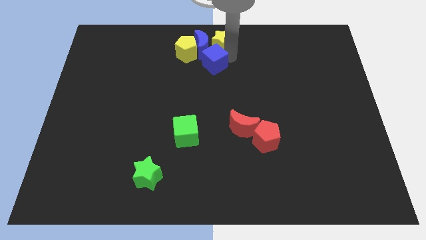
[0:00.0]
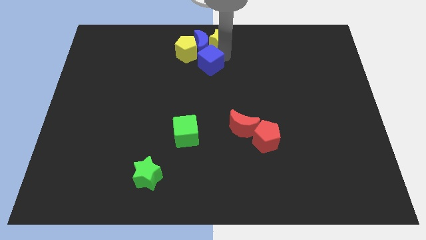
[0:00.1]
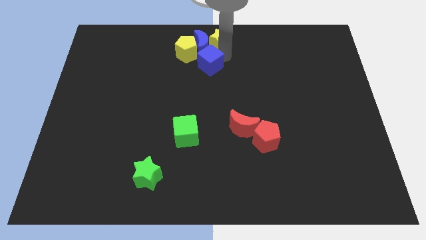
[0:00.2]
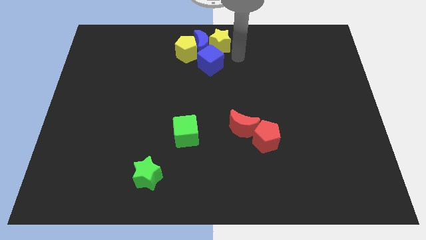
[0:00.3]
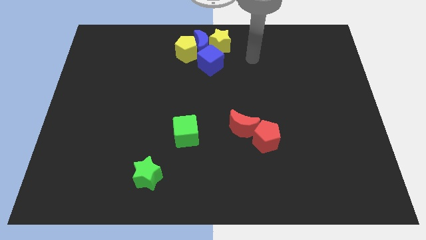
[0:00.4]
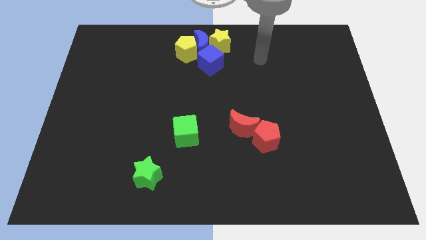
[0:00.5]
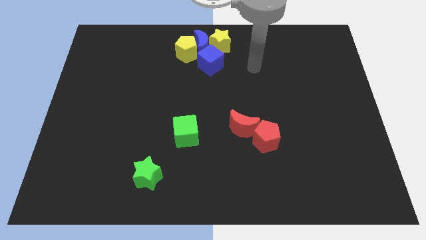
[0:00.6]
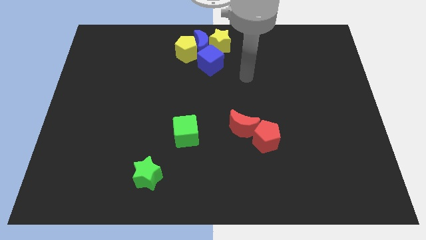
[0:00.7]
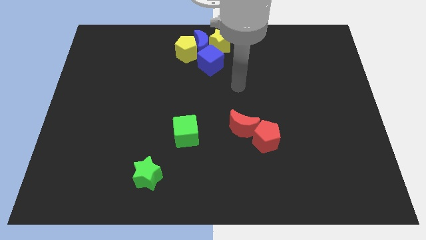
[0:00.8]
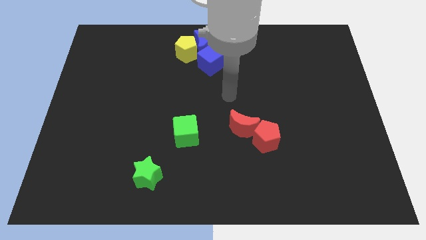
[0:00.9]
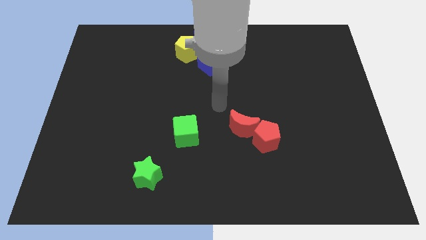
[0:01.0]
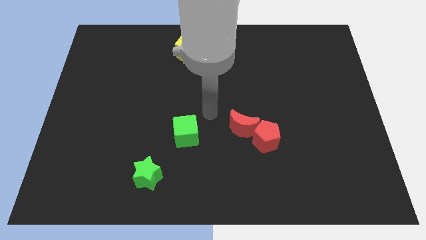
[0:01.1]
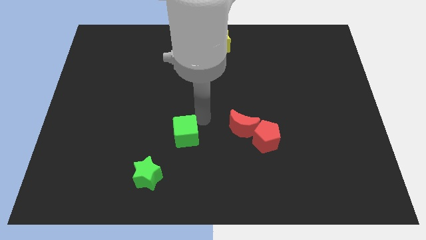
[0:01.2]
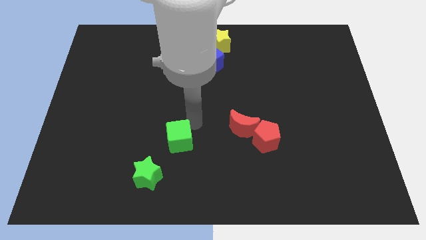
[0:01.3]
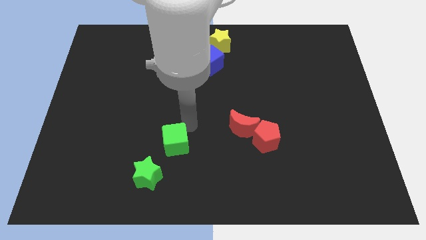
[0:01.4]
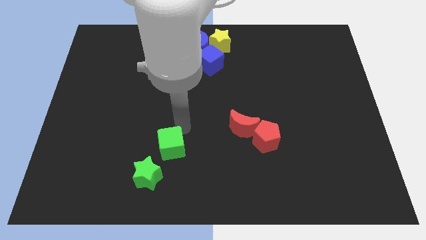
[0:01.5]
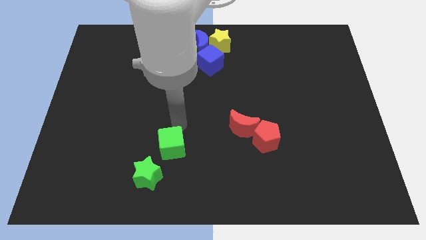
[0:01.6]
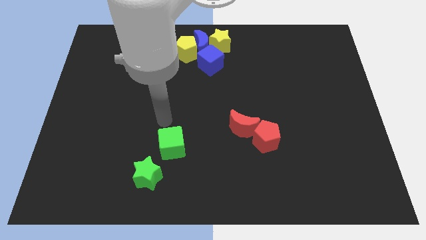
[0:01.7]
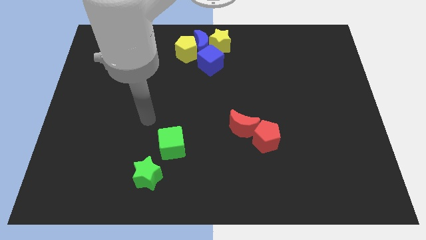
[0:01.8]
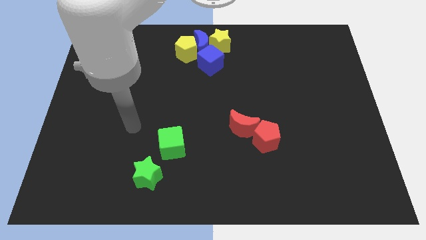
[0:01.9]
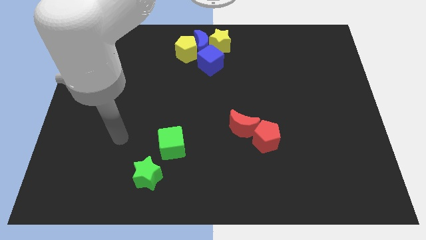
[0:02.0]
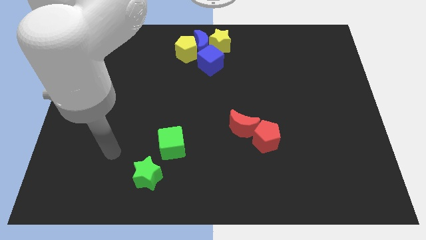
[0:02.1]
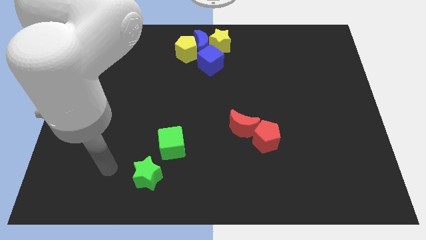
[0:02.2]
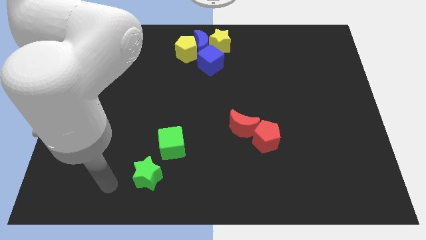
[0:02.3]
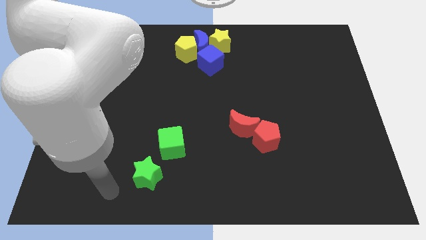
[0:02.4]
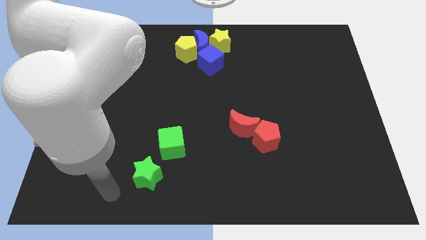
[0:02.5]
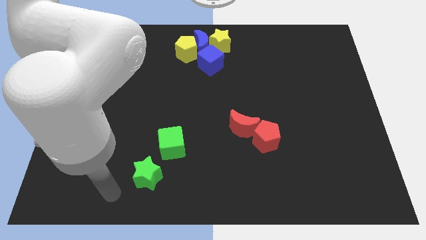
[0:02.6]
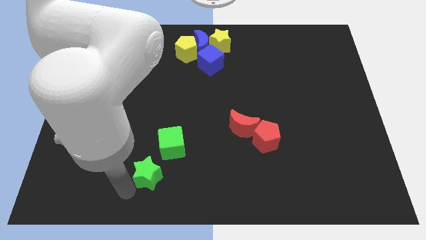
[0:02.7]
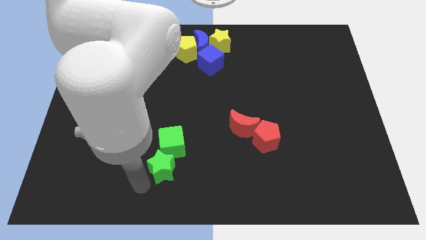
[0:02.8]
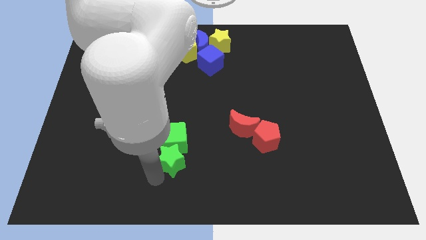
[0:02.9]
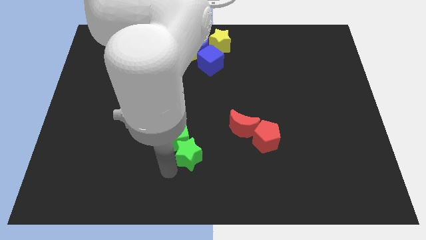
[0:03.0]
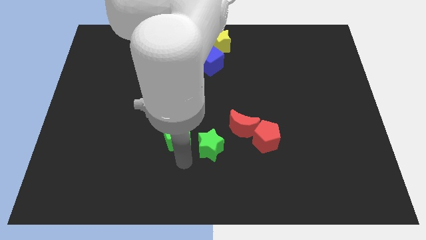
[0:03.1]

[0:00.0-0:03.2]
make the green blocks together

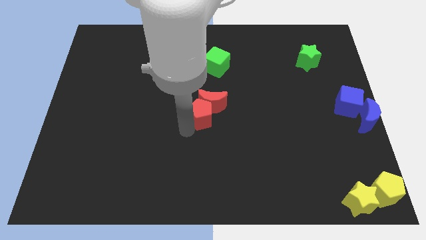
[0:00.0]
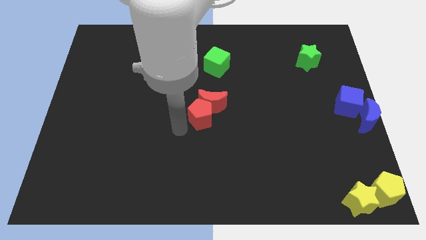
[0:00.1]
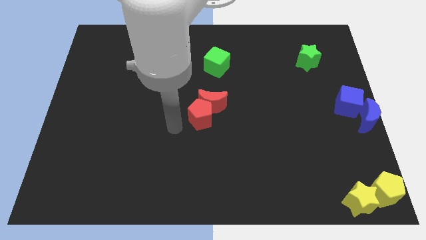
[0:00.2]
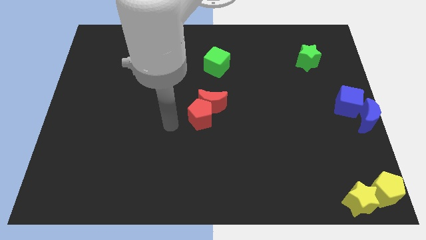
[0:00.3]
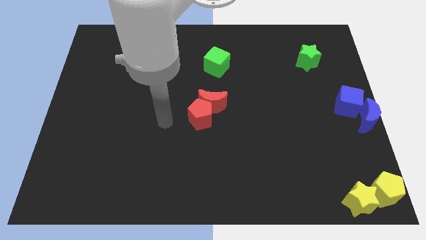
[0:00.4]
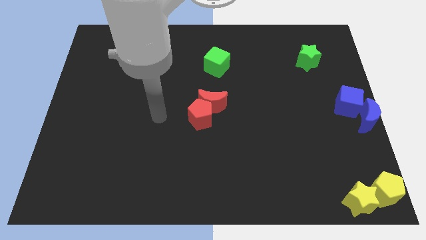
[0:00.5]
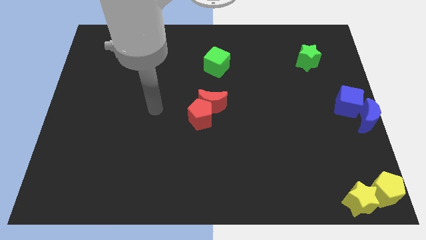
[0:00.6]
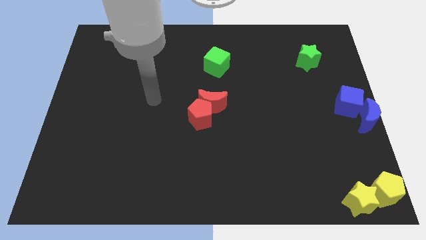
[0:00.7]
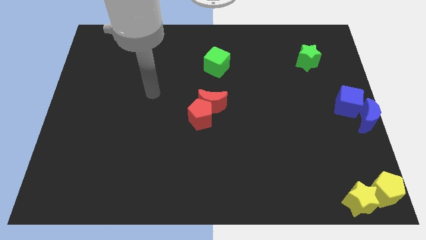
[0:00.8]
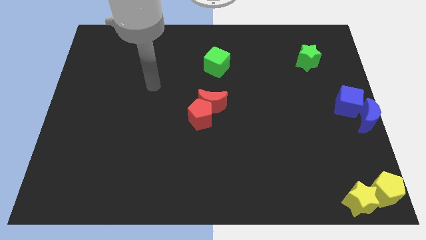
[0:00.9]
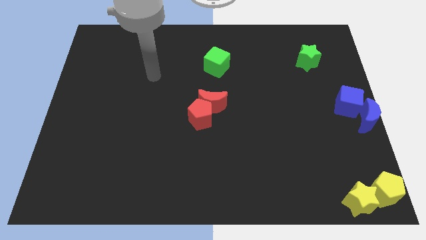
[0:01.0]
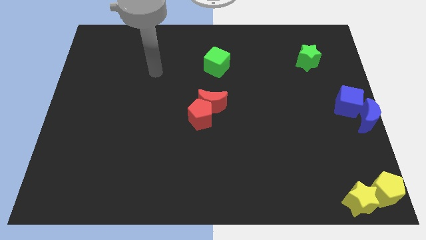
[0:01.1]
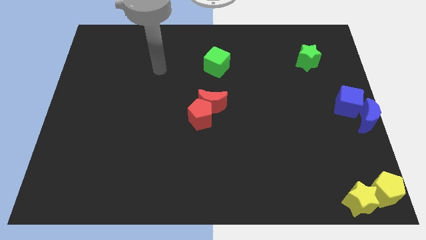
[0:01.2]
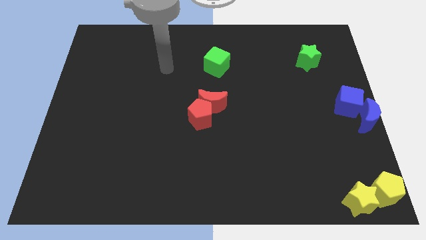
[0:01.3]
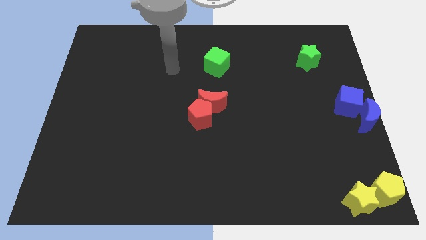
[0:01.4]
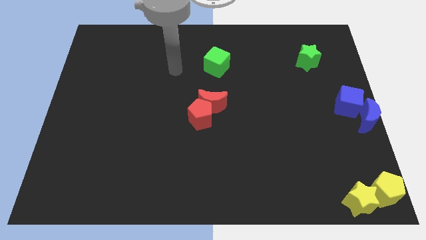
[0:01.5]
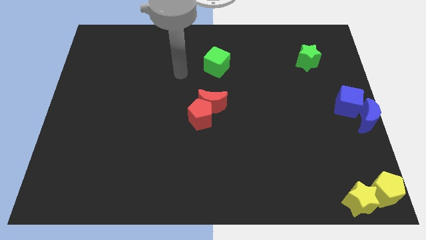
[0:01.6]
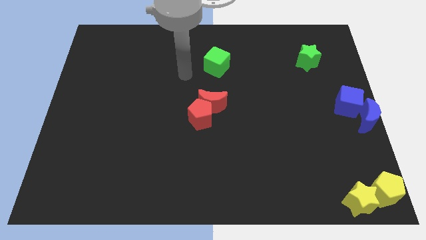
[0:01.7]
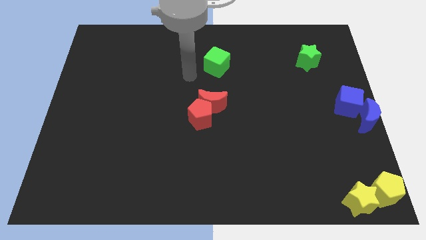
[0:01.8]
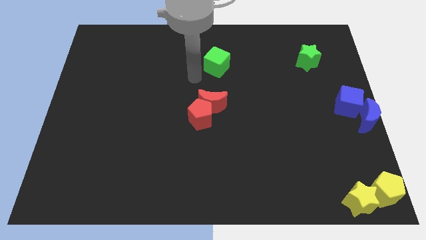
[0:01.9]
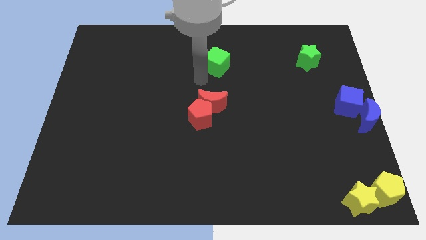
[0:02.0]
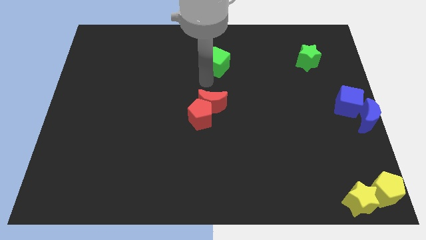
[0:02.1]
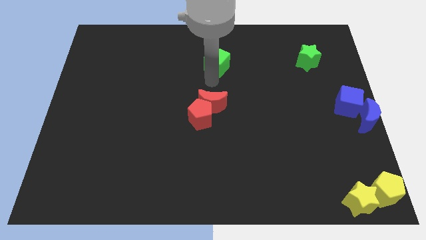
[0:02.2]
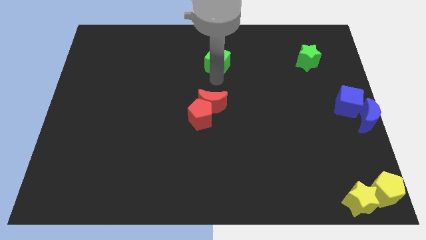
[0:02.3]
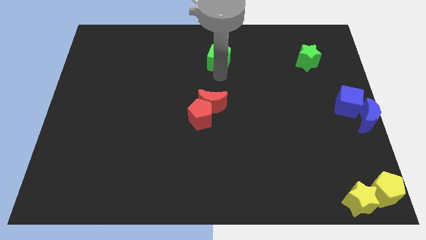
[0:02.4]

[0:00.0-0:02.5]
move your arm to the bottom of the green cube

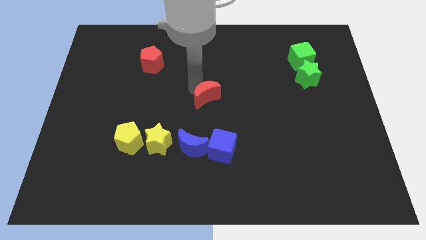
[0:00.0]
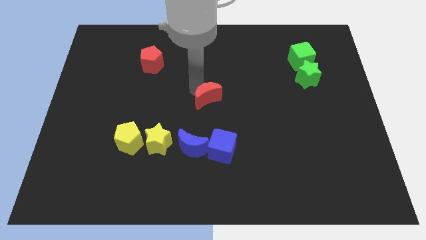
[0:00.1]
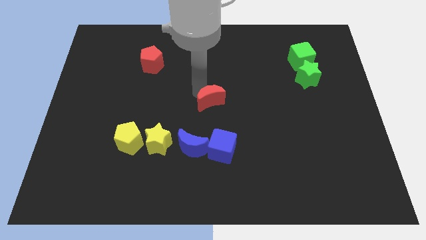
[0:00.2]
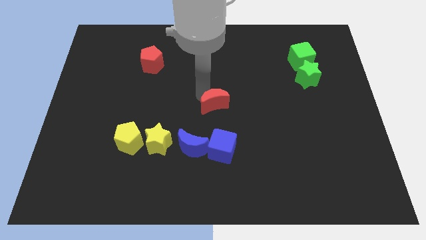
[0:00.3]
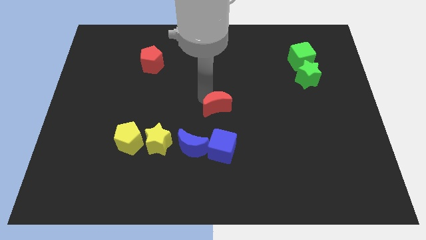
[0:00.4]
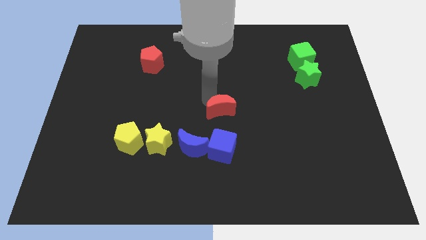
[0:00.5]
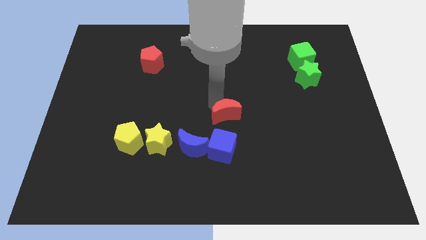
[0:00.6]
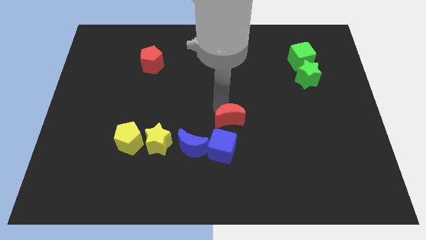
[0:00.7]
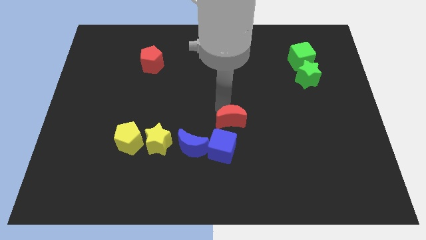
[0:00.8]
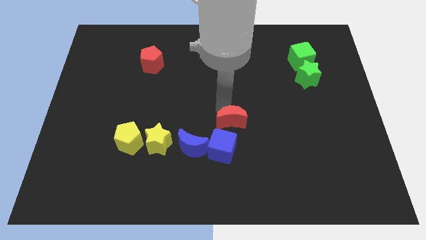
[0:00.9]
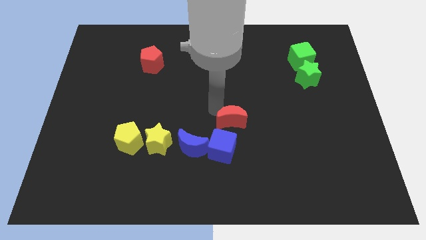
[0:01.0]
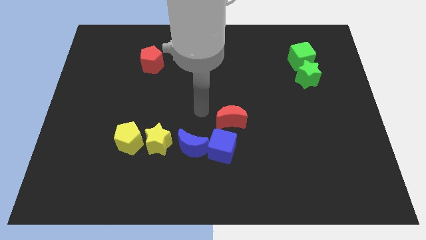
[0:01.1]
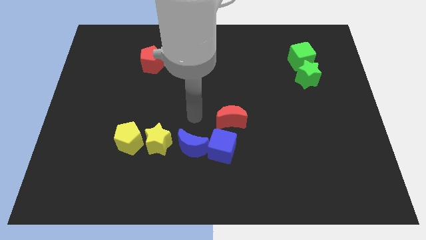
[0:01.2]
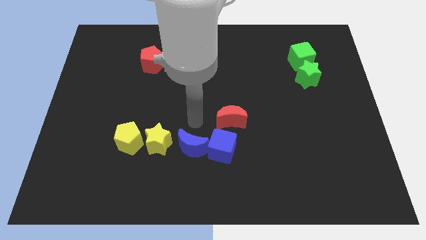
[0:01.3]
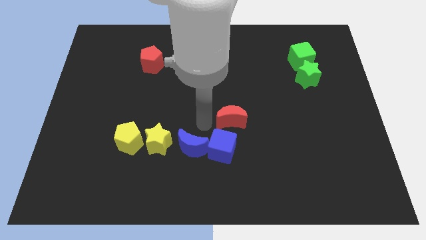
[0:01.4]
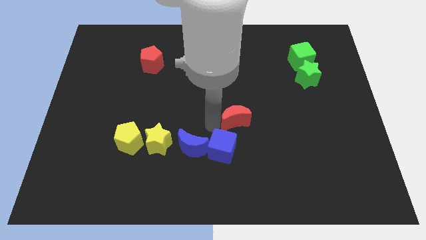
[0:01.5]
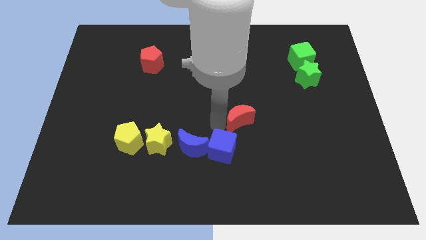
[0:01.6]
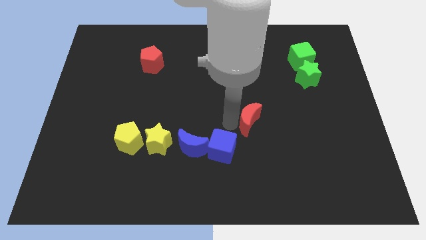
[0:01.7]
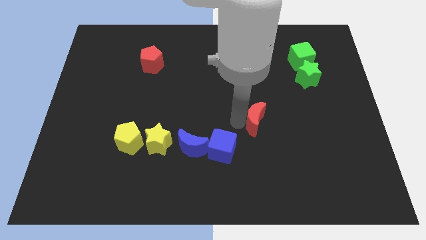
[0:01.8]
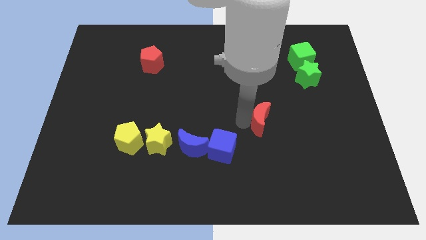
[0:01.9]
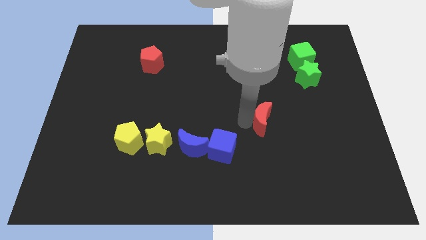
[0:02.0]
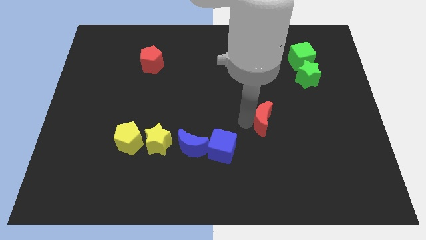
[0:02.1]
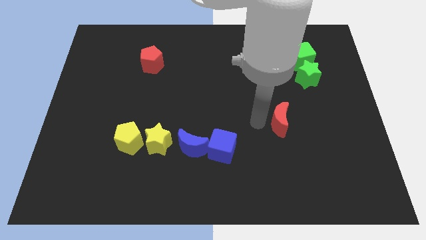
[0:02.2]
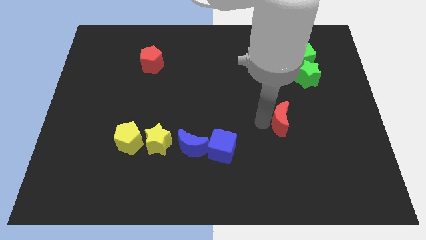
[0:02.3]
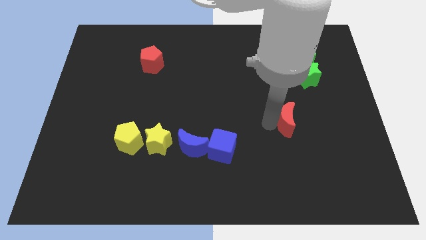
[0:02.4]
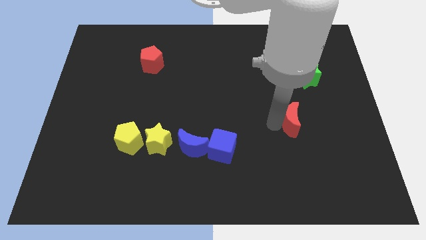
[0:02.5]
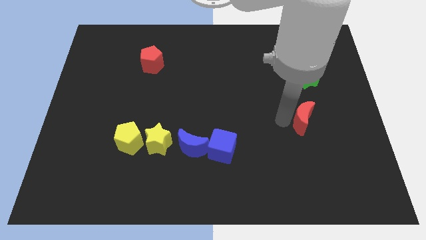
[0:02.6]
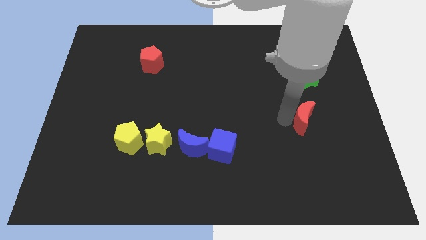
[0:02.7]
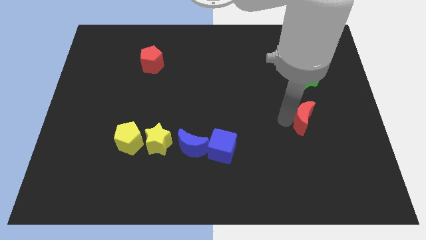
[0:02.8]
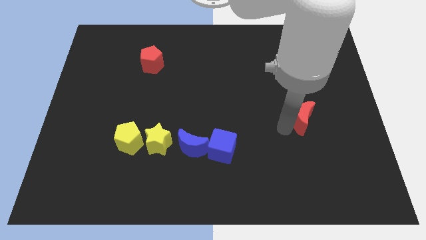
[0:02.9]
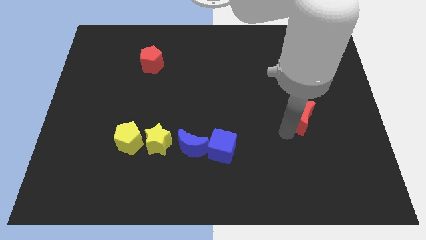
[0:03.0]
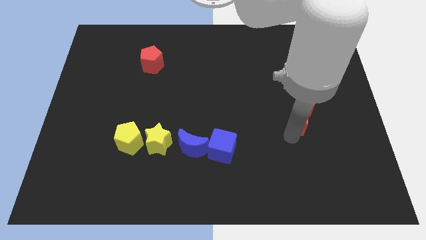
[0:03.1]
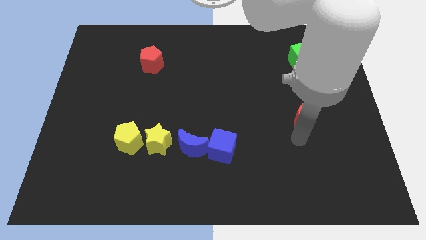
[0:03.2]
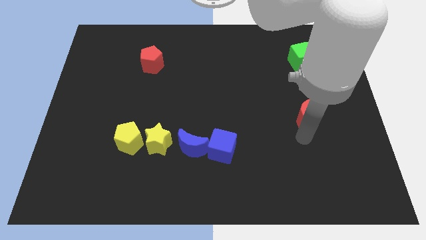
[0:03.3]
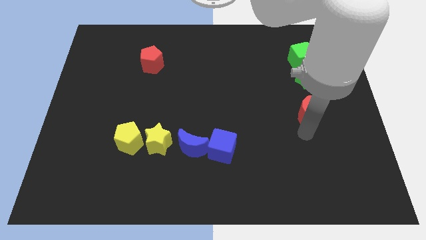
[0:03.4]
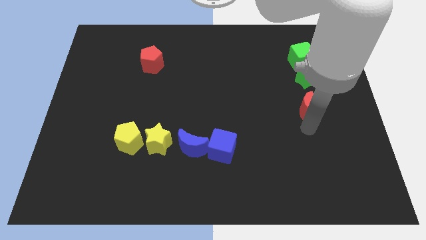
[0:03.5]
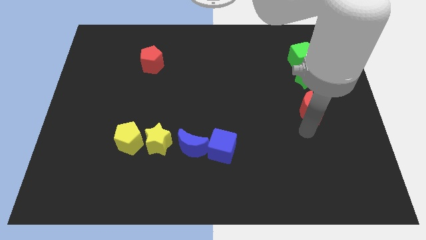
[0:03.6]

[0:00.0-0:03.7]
place red moon below green star
